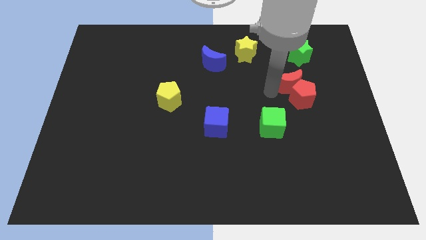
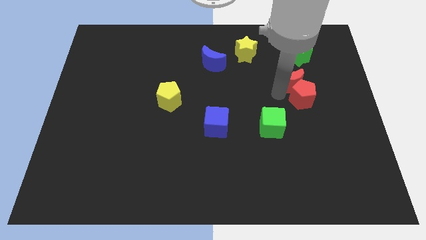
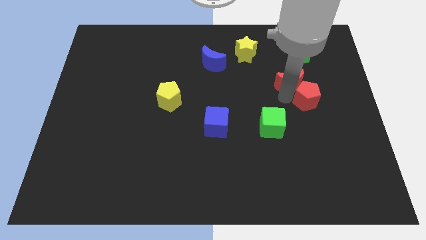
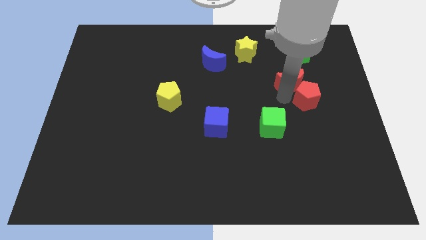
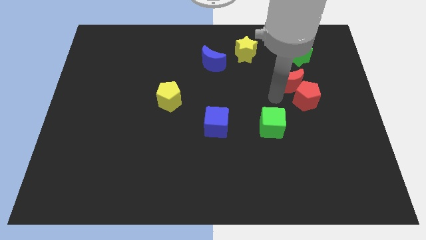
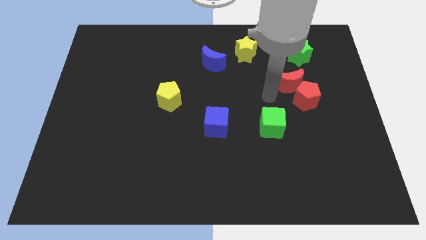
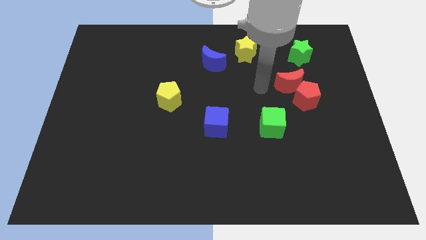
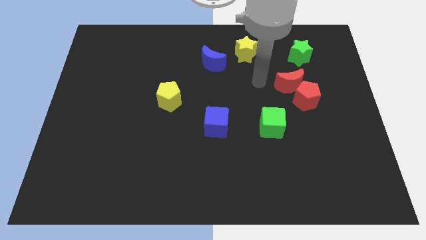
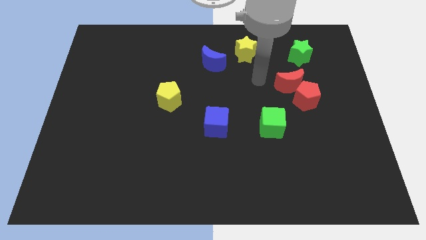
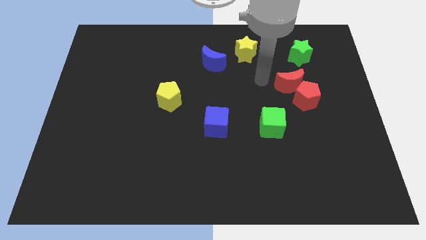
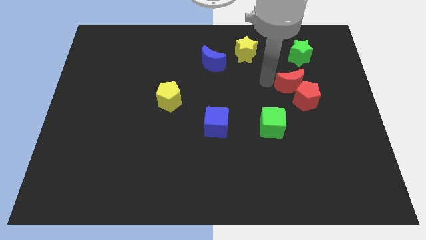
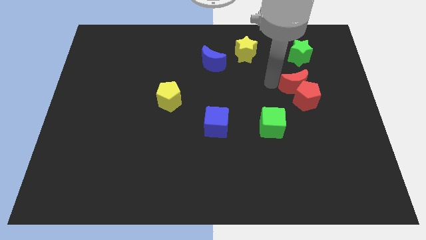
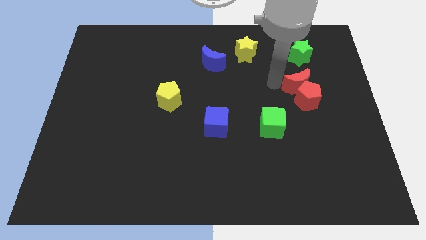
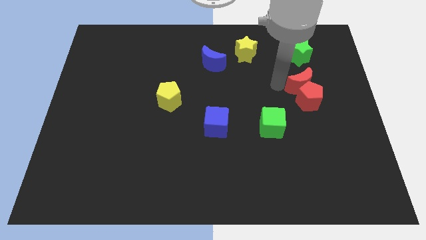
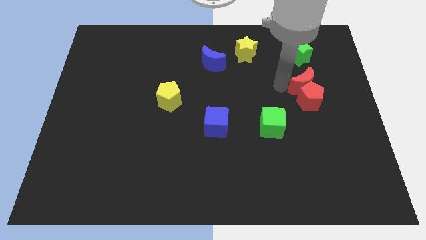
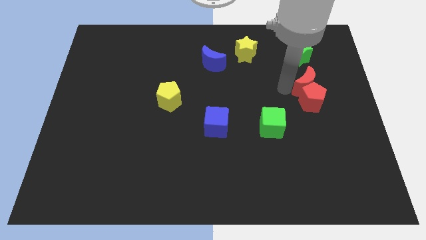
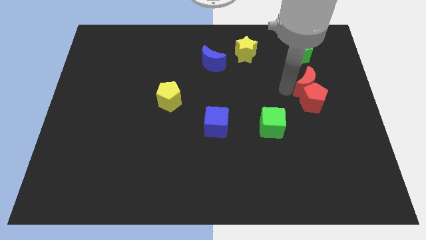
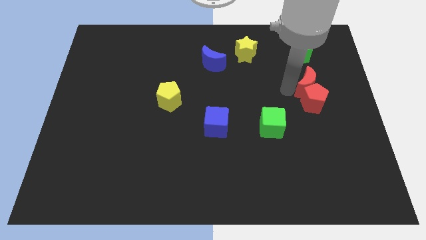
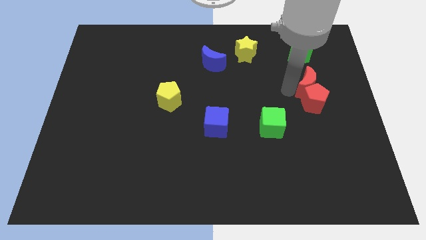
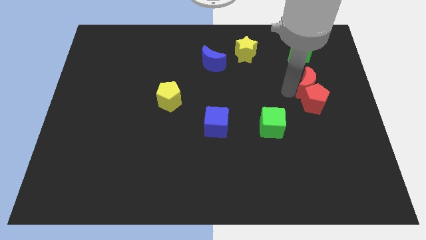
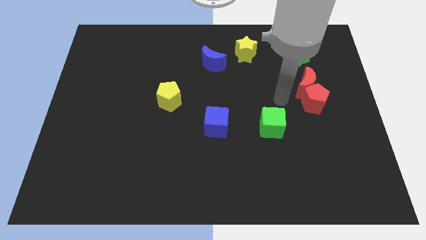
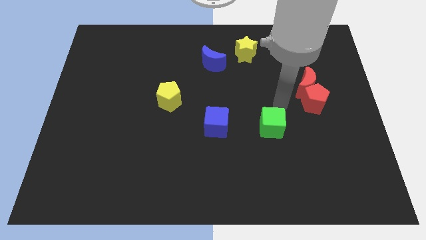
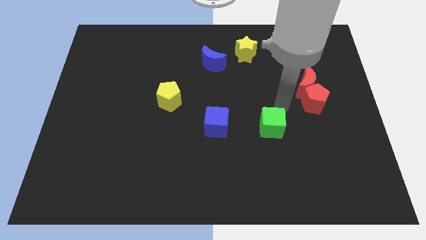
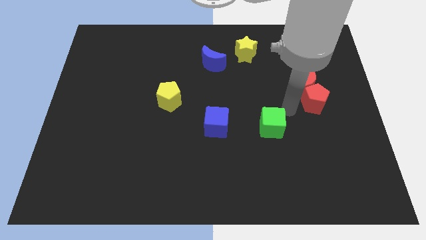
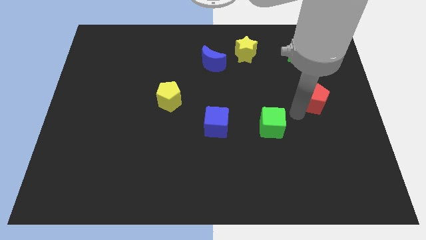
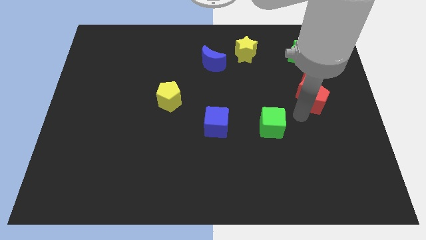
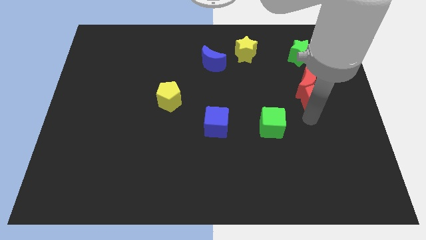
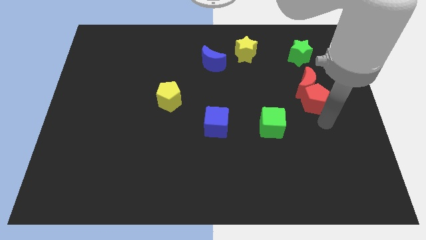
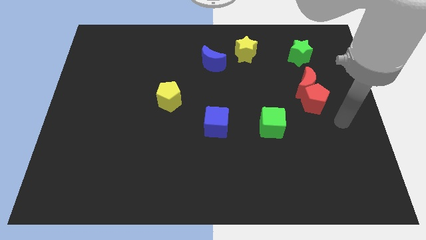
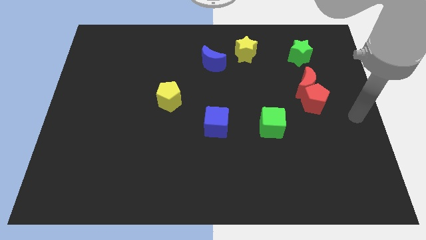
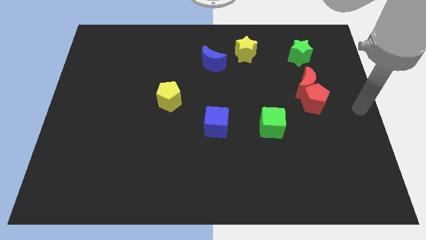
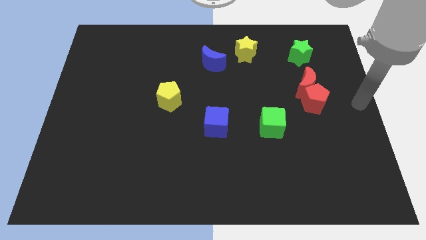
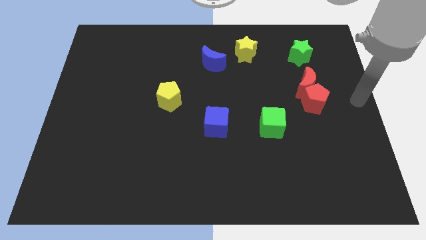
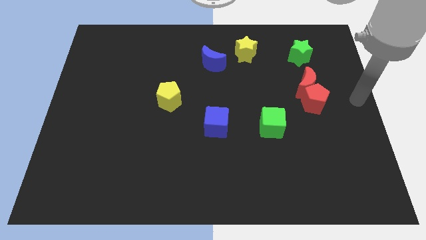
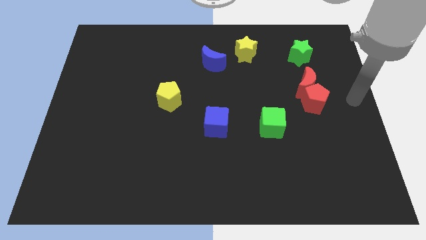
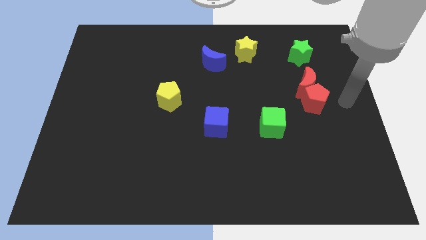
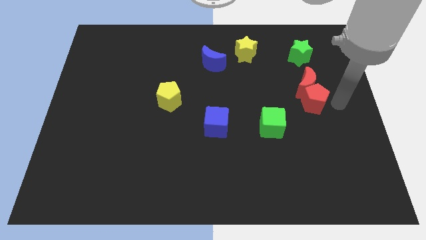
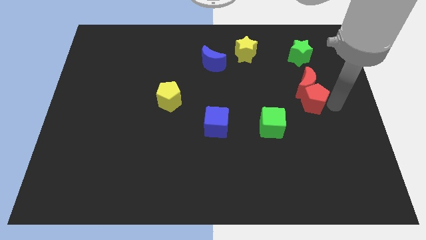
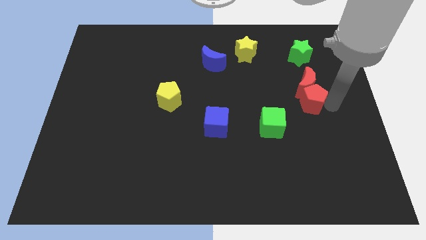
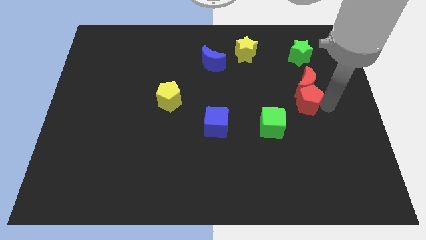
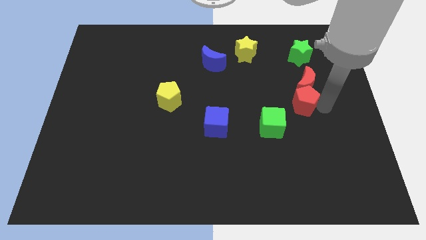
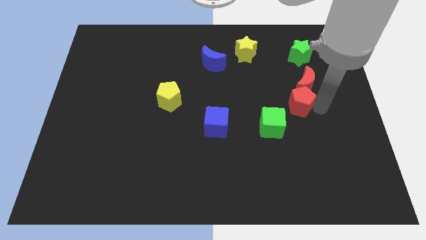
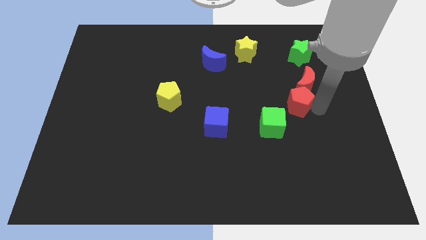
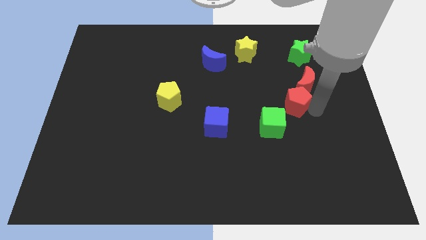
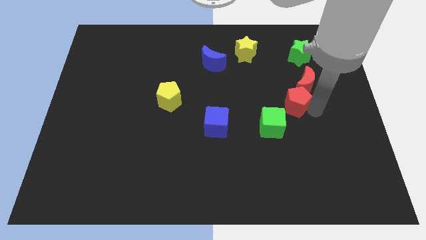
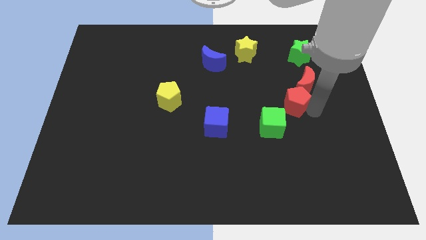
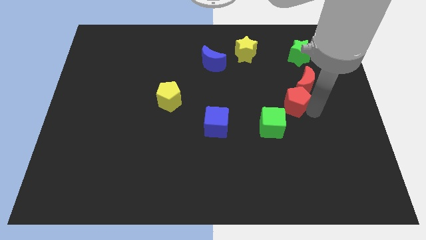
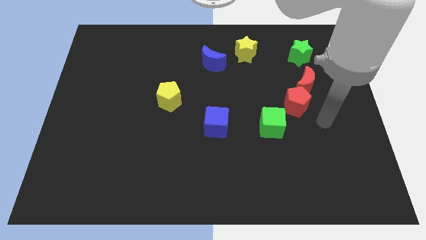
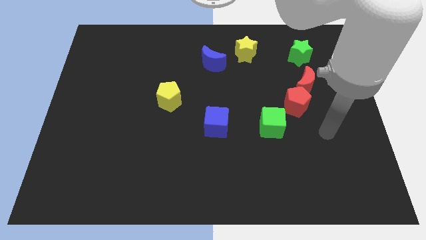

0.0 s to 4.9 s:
place the red pentagon between the red moon and green cube

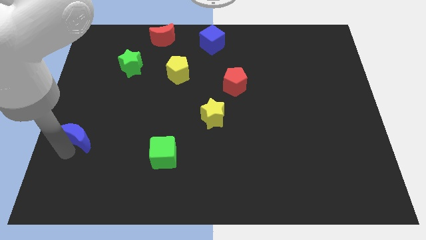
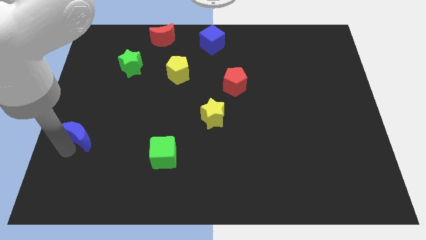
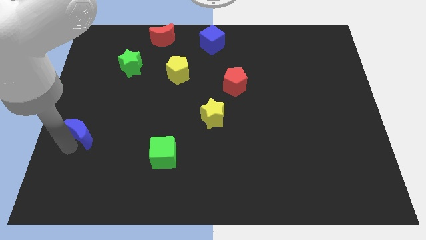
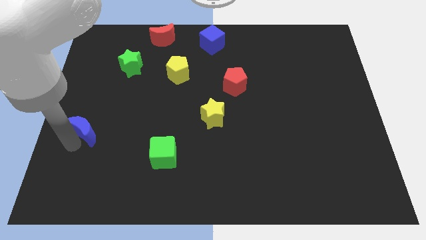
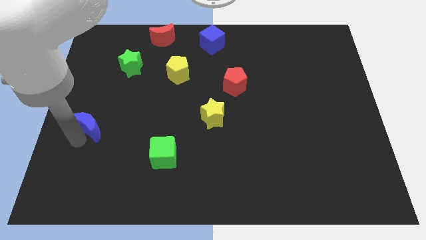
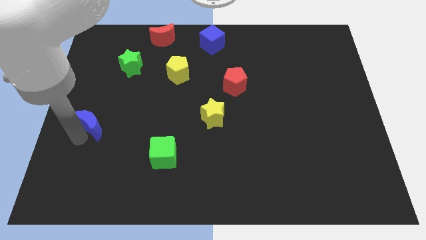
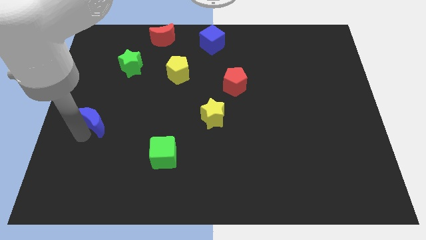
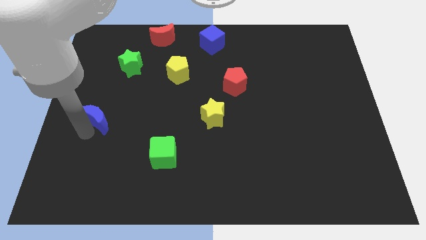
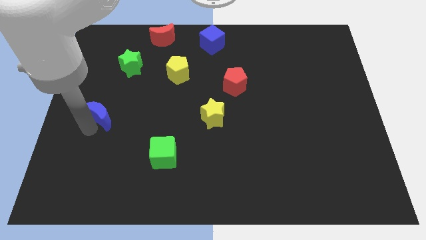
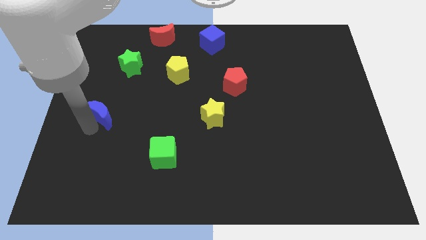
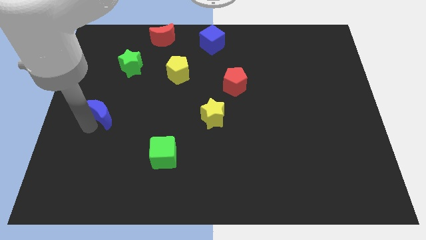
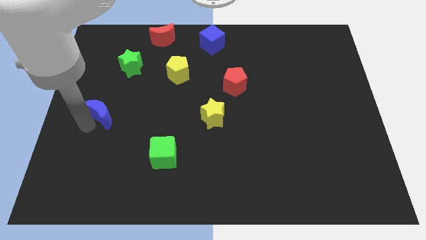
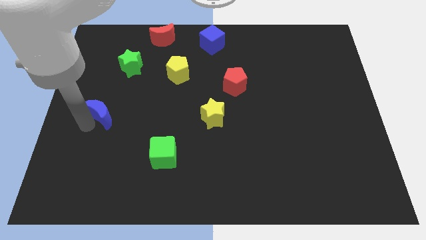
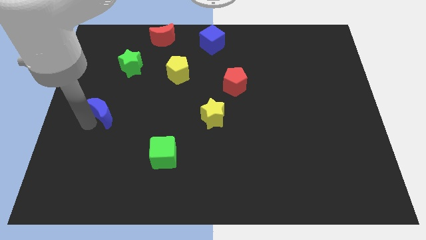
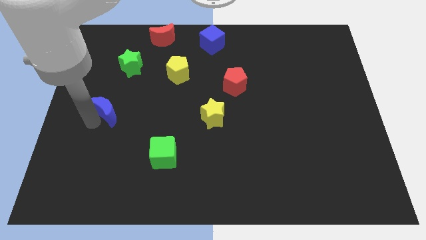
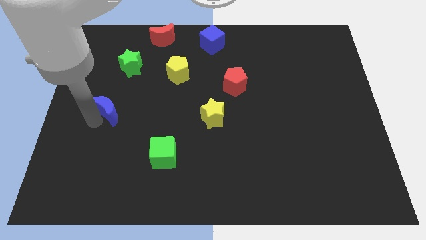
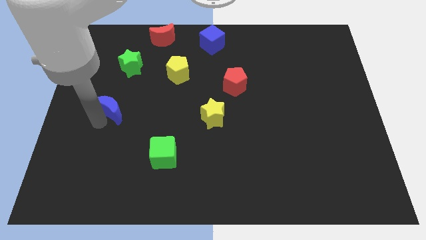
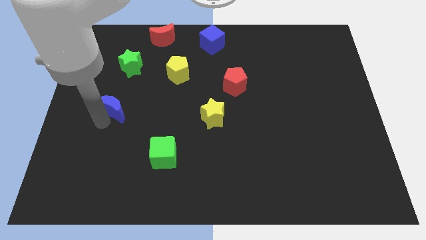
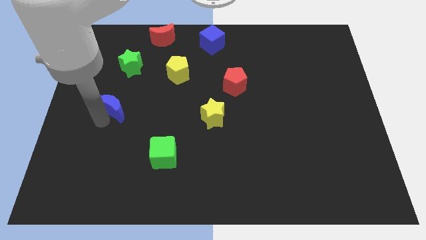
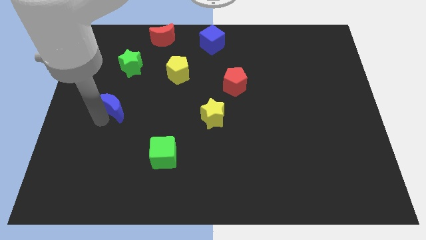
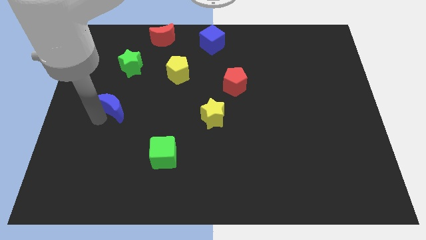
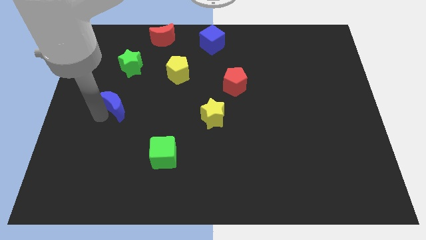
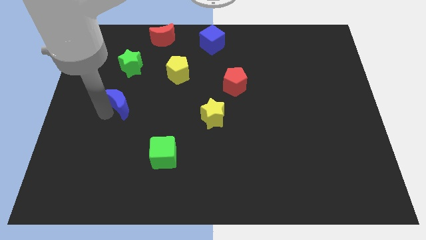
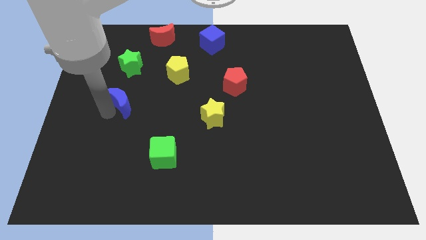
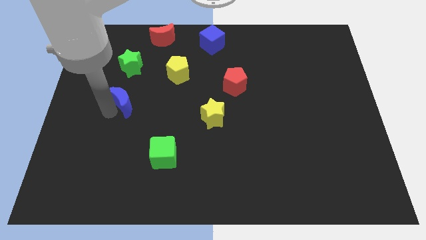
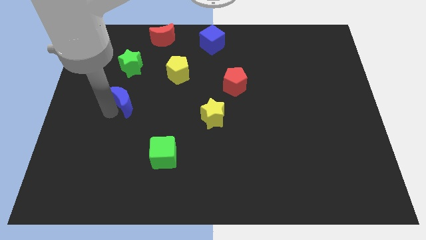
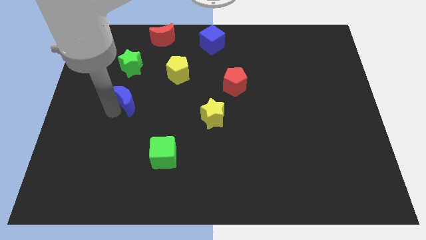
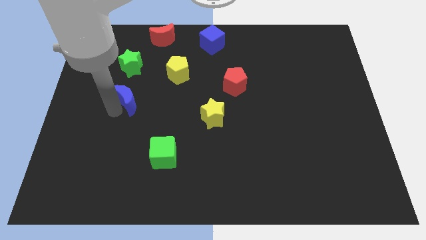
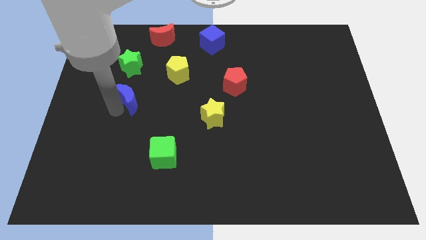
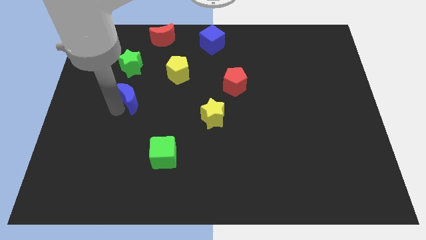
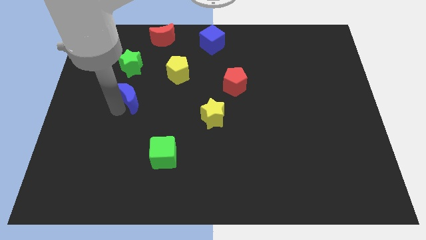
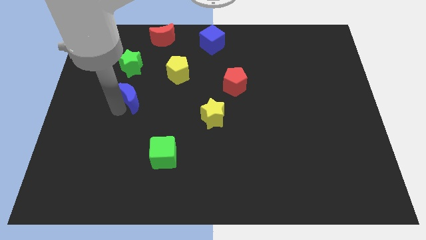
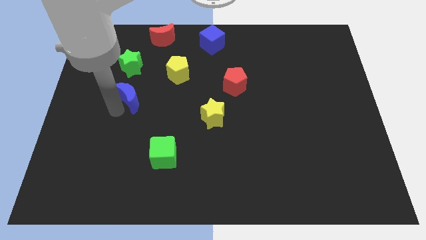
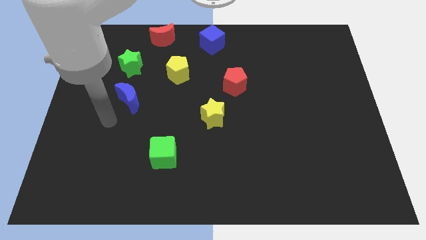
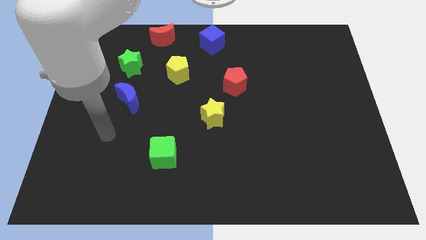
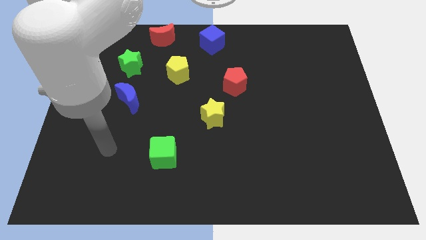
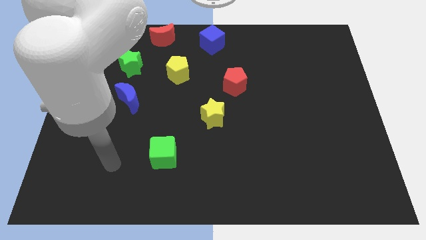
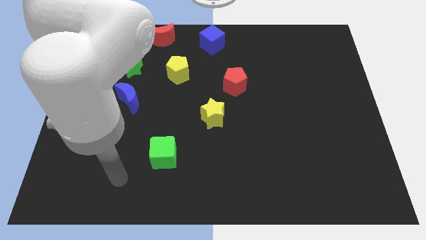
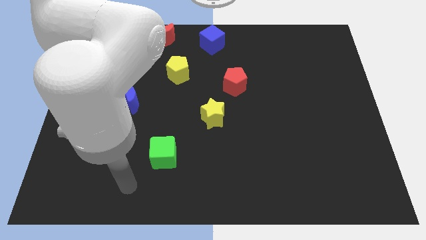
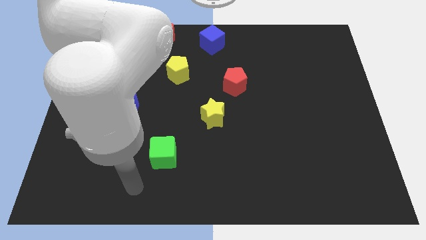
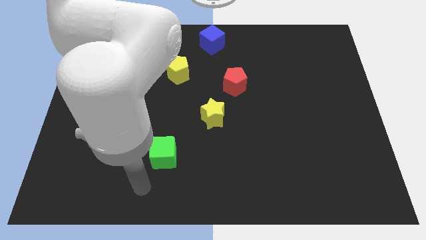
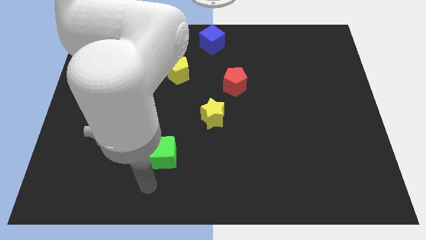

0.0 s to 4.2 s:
move the blue crescent below the green star
